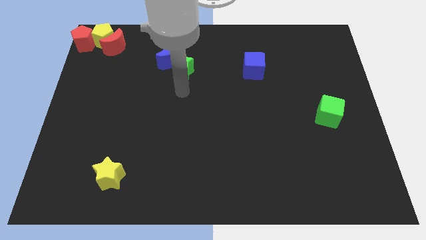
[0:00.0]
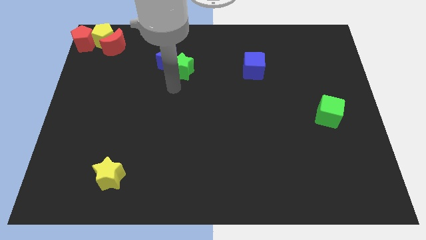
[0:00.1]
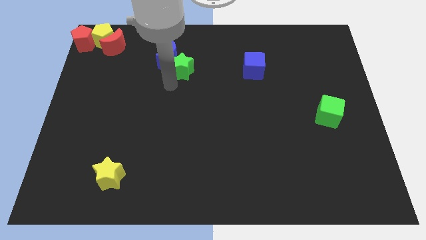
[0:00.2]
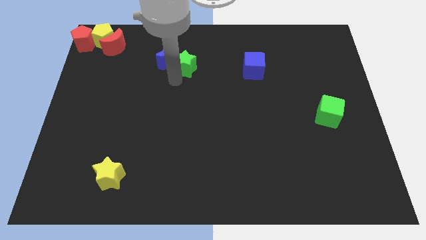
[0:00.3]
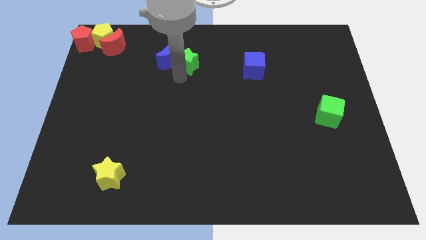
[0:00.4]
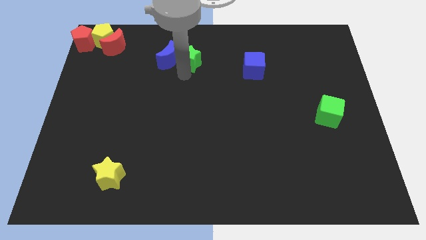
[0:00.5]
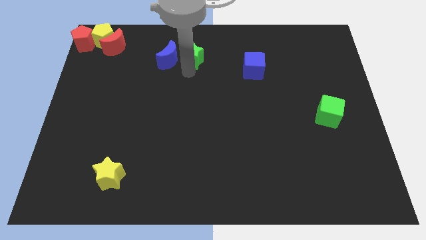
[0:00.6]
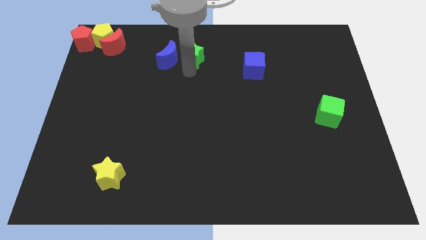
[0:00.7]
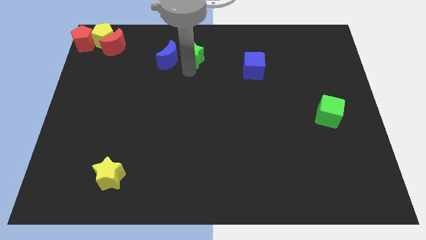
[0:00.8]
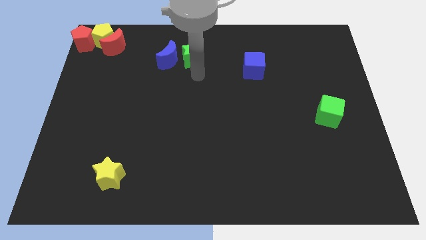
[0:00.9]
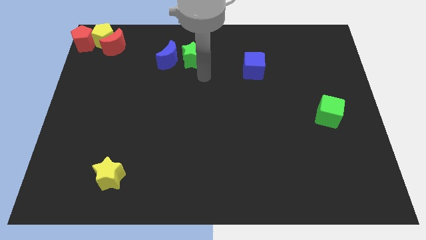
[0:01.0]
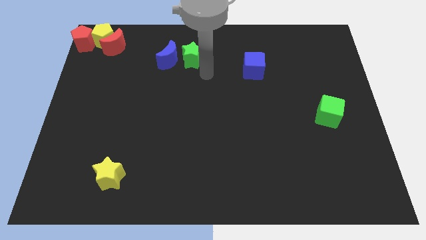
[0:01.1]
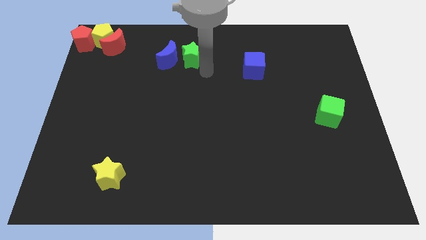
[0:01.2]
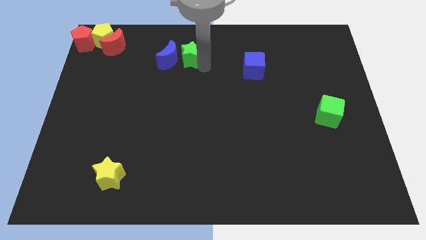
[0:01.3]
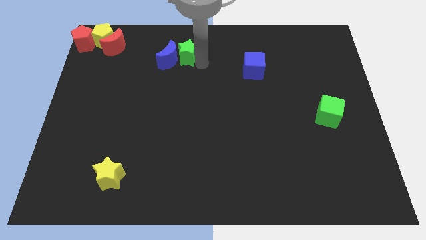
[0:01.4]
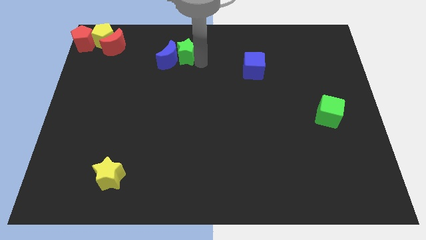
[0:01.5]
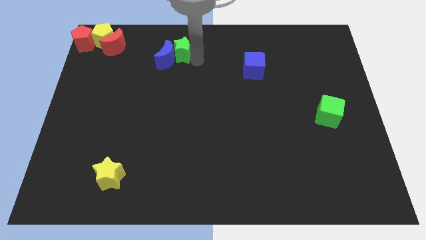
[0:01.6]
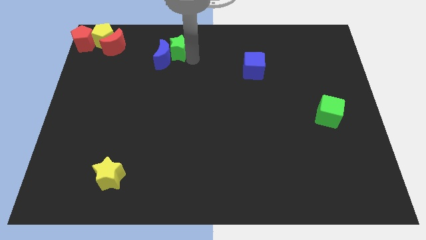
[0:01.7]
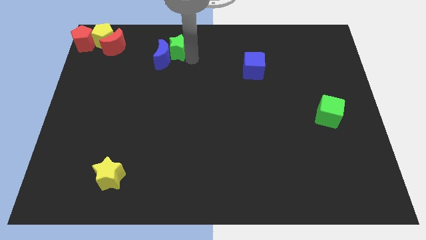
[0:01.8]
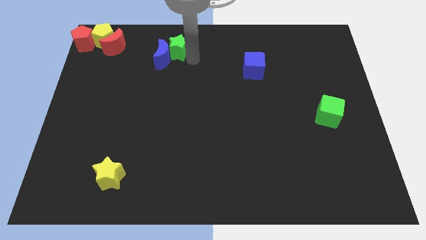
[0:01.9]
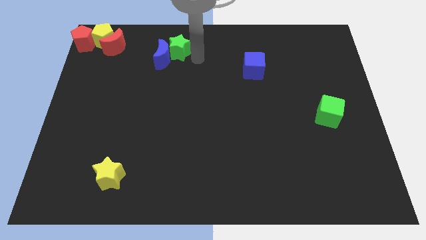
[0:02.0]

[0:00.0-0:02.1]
adjust the green star to the right of the blue moon

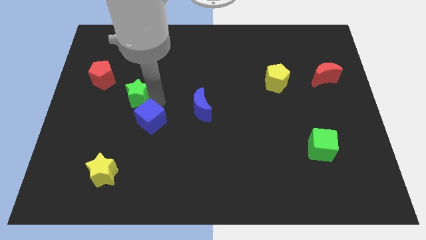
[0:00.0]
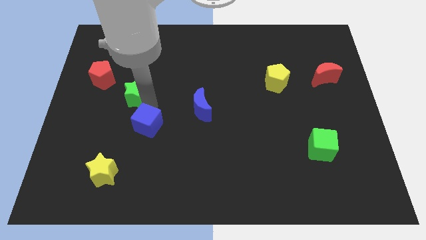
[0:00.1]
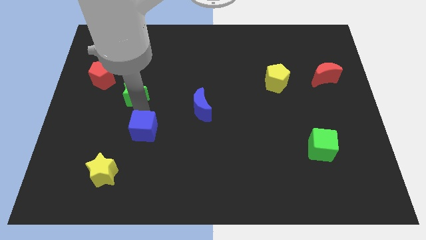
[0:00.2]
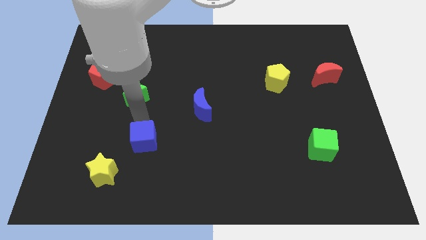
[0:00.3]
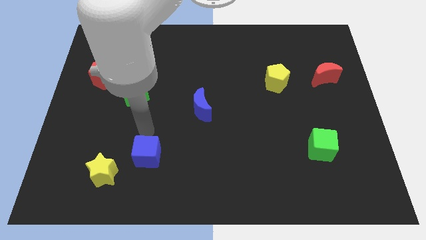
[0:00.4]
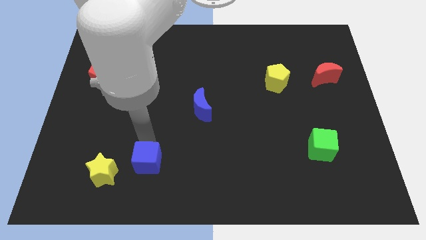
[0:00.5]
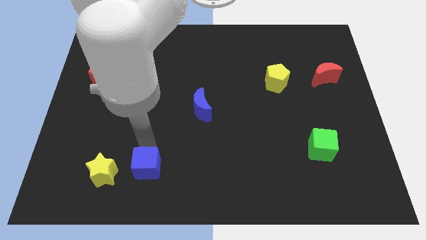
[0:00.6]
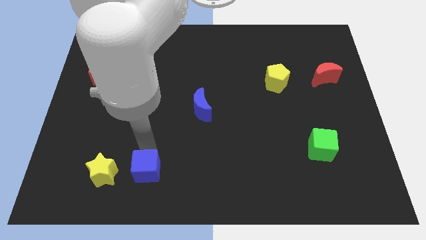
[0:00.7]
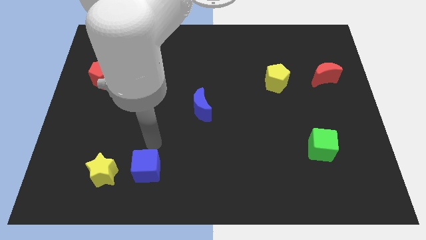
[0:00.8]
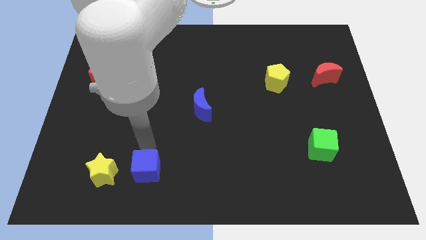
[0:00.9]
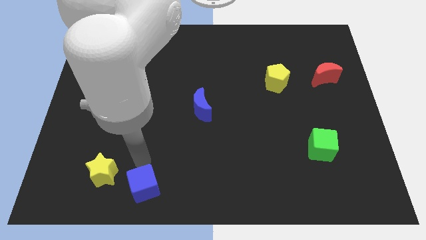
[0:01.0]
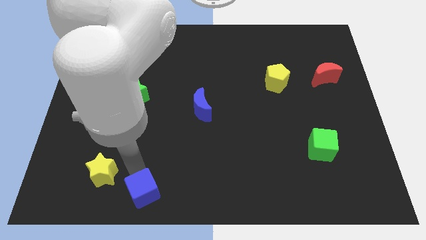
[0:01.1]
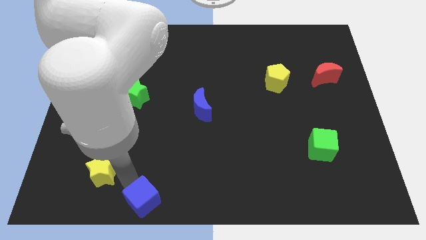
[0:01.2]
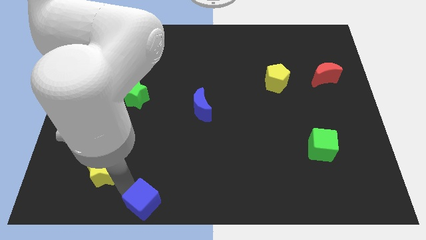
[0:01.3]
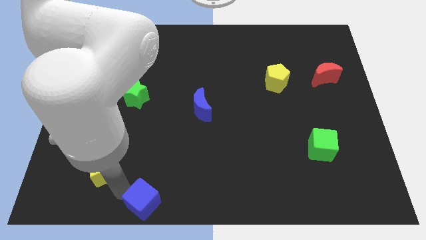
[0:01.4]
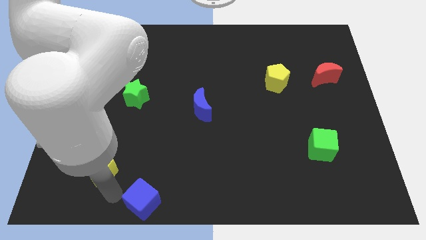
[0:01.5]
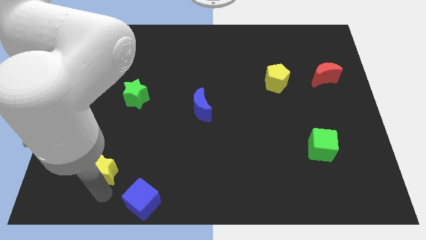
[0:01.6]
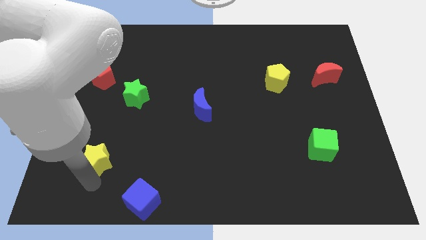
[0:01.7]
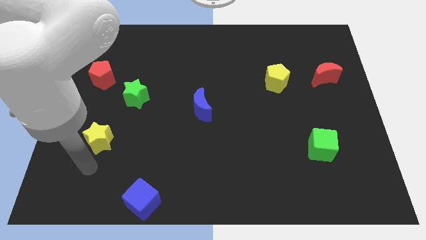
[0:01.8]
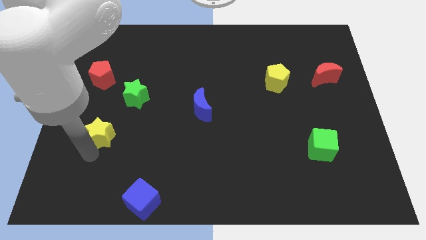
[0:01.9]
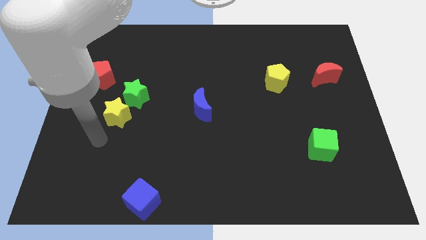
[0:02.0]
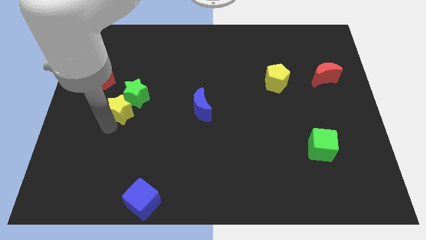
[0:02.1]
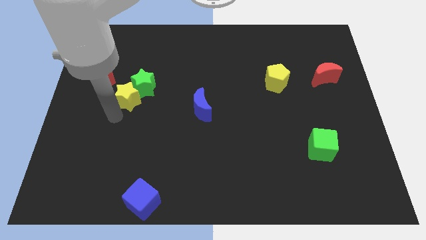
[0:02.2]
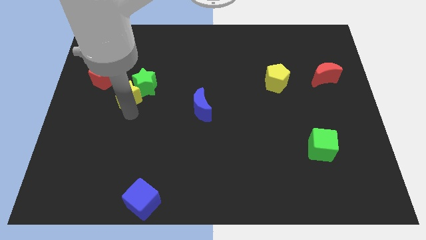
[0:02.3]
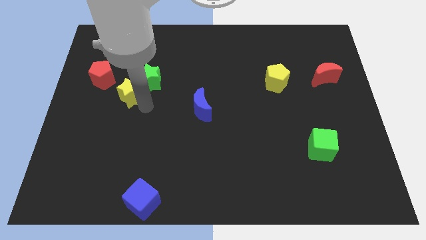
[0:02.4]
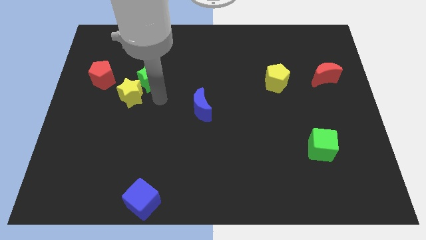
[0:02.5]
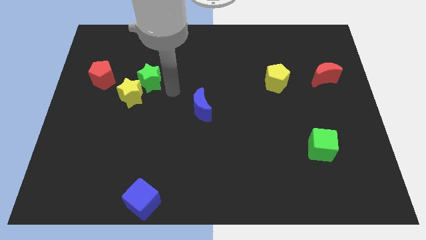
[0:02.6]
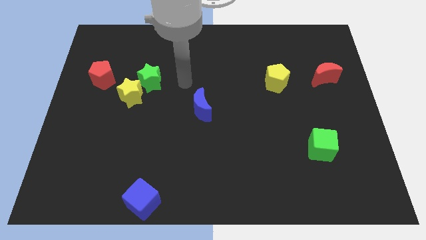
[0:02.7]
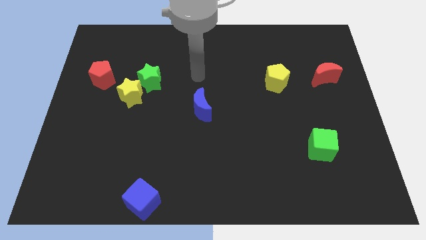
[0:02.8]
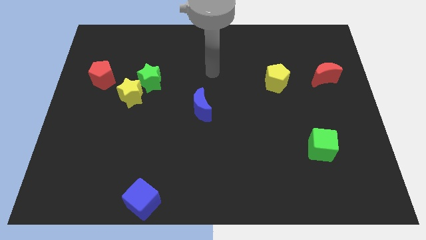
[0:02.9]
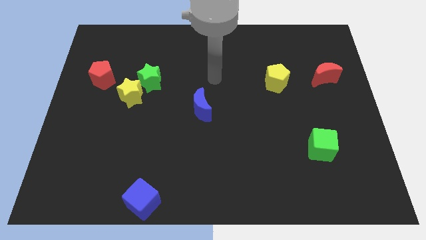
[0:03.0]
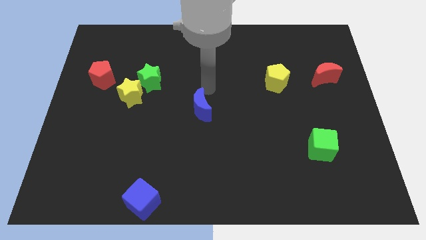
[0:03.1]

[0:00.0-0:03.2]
place the arm above the blue moon

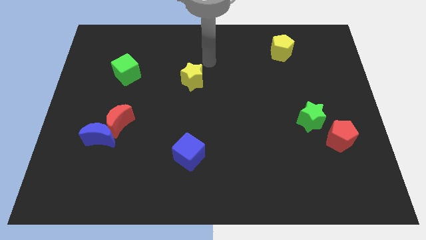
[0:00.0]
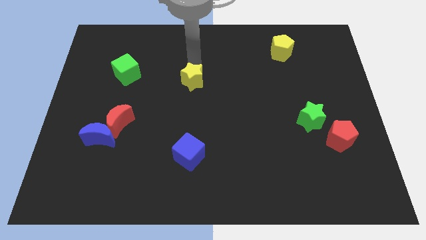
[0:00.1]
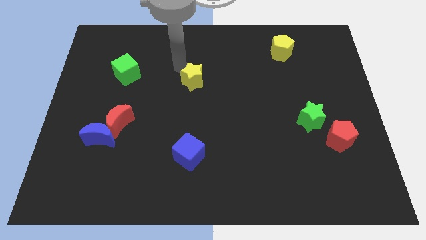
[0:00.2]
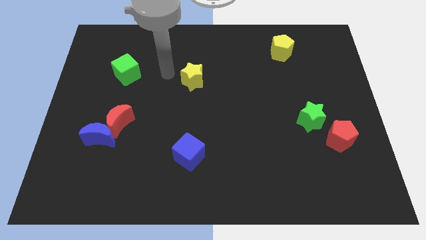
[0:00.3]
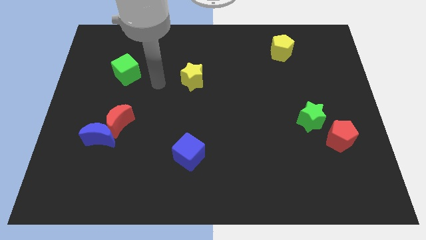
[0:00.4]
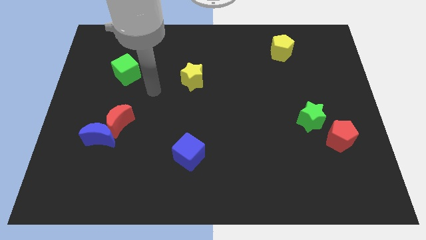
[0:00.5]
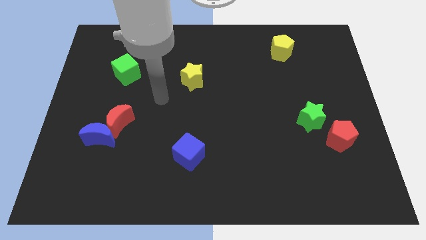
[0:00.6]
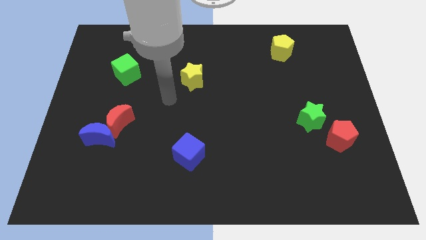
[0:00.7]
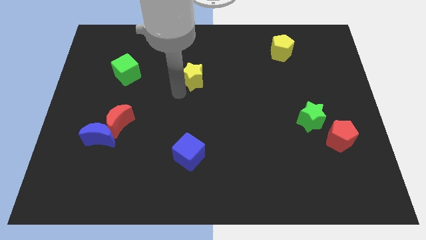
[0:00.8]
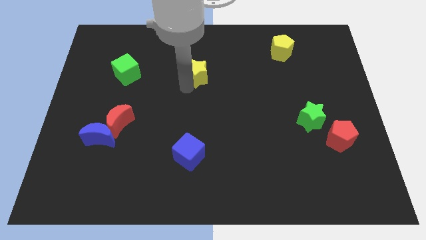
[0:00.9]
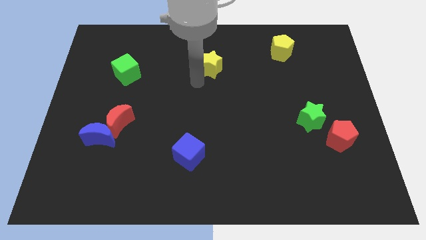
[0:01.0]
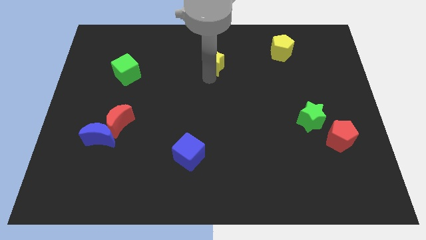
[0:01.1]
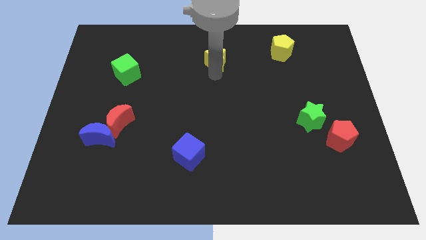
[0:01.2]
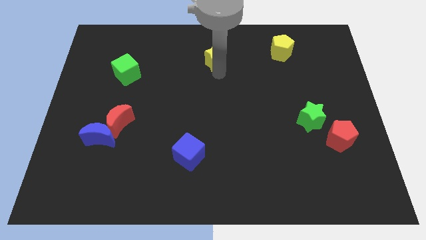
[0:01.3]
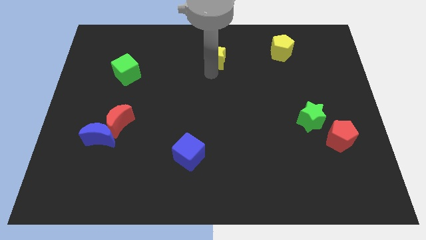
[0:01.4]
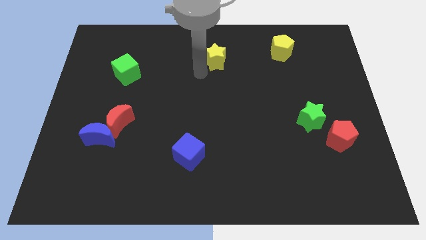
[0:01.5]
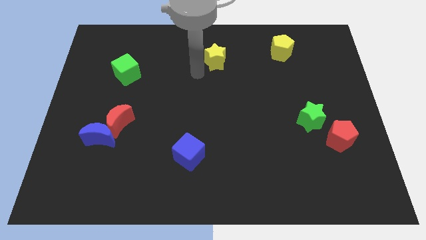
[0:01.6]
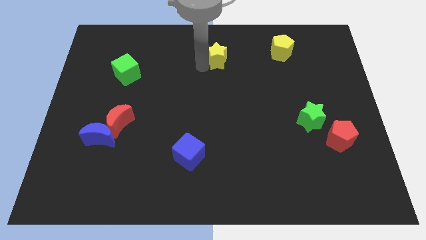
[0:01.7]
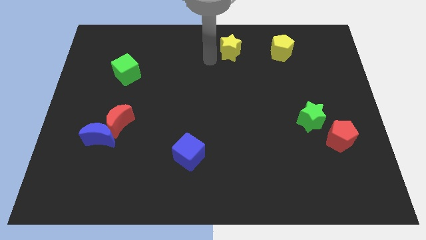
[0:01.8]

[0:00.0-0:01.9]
move the yellow star towards the top center of the board

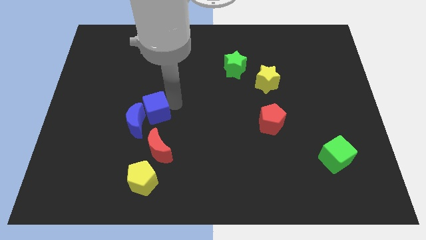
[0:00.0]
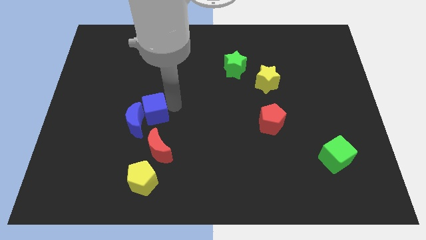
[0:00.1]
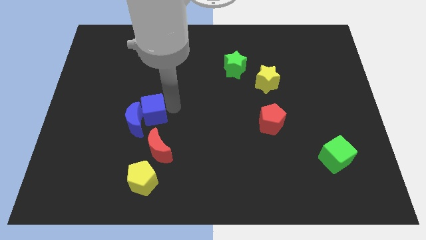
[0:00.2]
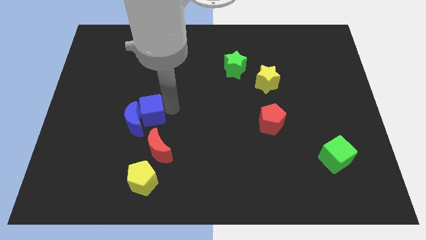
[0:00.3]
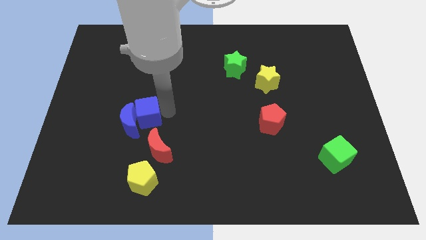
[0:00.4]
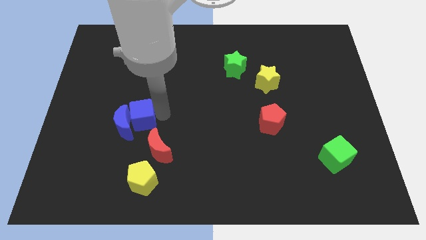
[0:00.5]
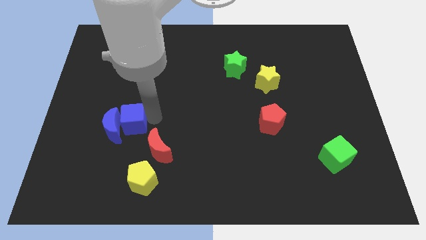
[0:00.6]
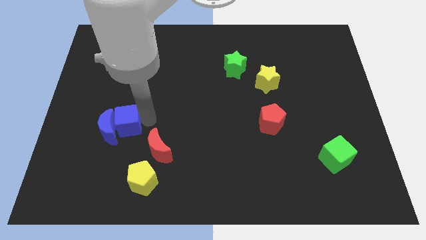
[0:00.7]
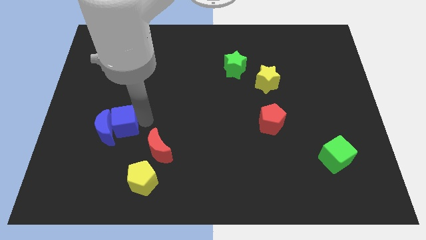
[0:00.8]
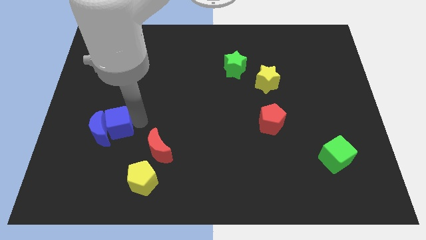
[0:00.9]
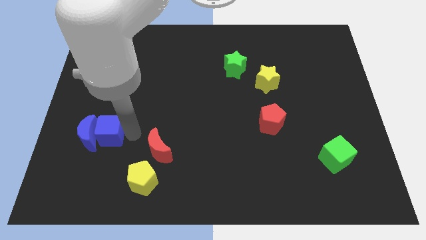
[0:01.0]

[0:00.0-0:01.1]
move the blue blocks to the top left side of the yellow pentagon

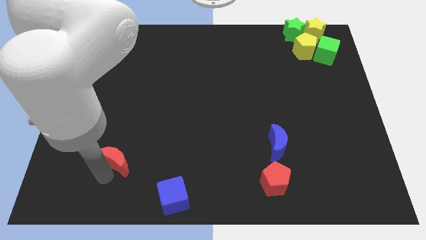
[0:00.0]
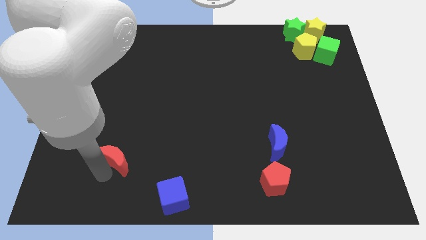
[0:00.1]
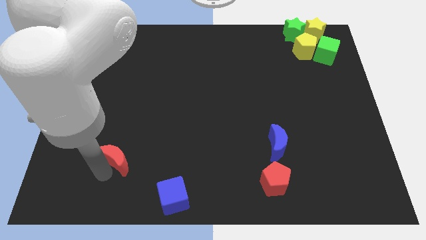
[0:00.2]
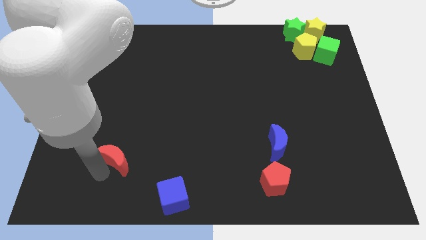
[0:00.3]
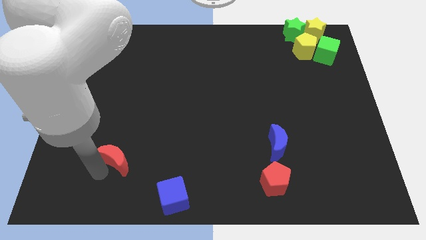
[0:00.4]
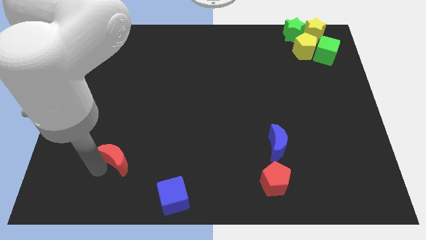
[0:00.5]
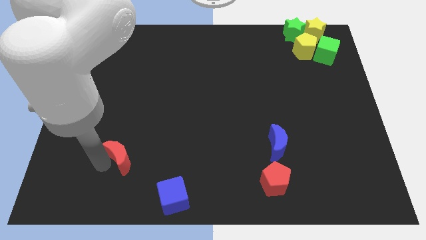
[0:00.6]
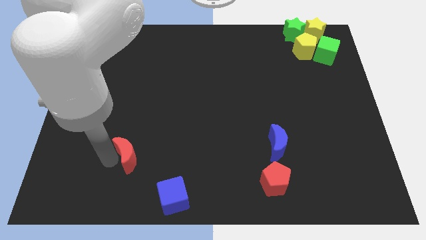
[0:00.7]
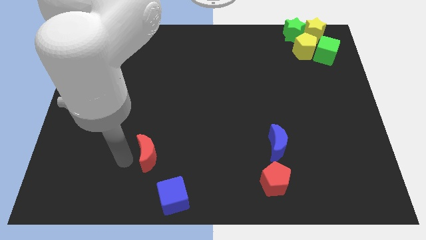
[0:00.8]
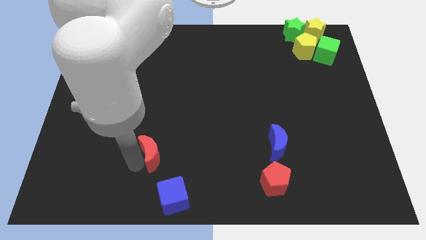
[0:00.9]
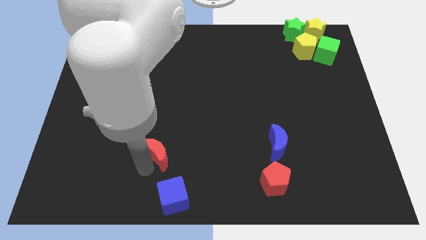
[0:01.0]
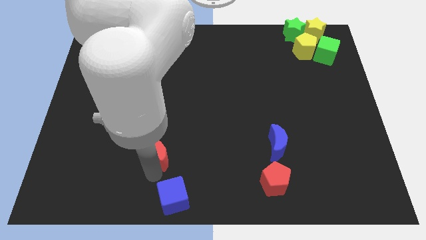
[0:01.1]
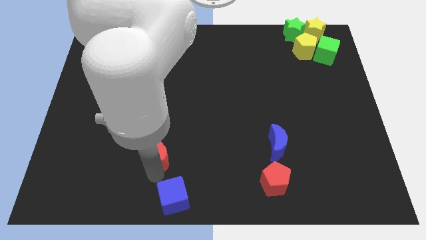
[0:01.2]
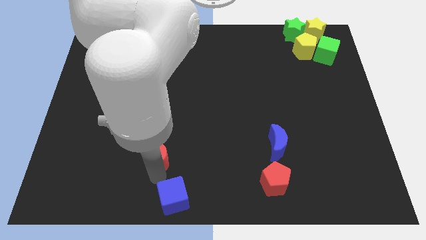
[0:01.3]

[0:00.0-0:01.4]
place red moon above the blue cube
